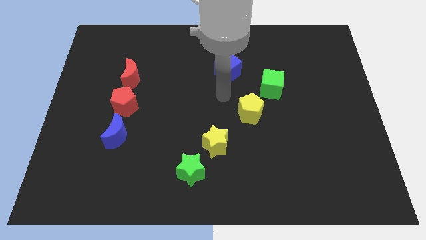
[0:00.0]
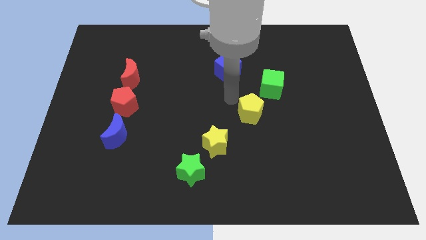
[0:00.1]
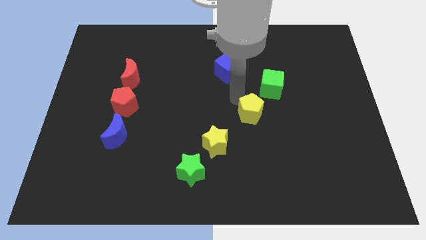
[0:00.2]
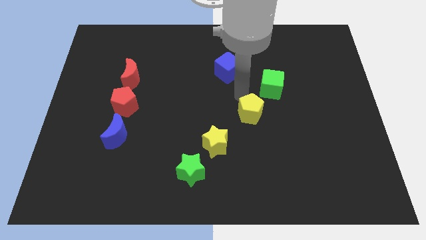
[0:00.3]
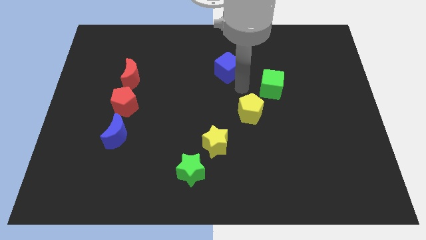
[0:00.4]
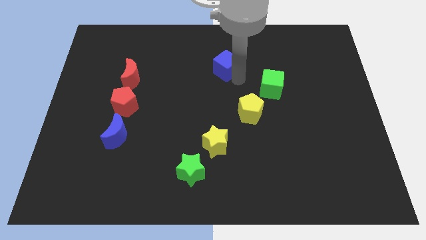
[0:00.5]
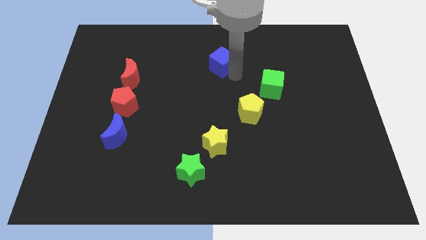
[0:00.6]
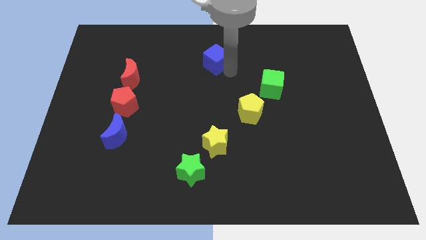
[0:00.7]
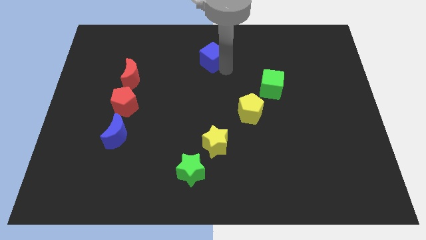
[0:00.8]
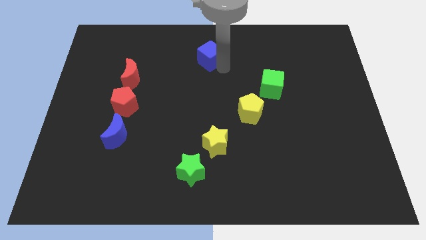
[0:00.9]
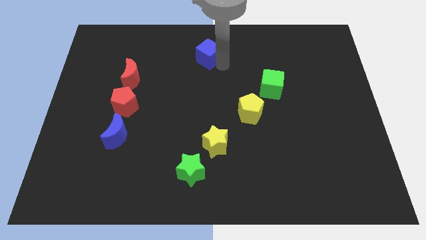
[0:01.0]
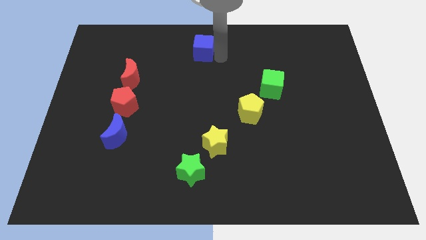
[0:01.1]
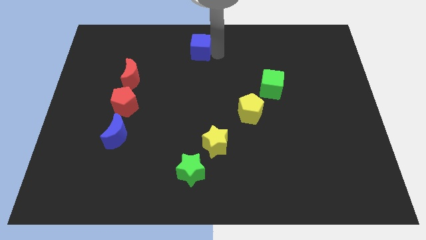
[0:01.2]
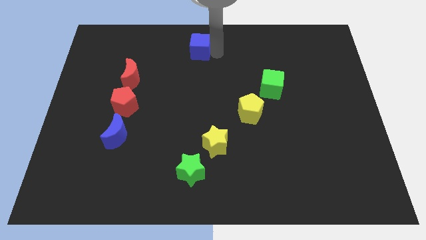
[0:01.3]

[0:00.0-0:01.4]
move blue cube to the top of the board

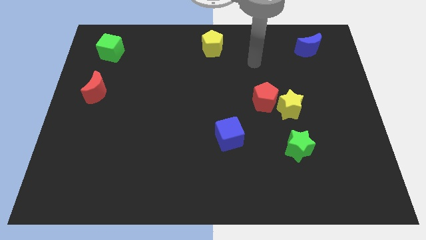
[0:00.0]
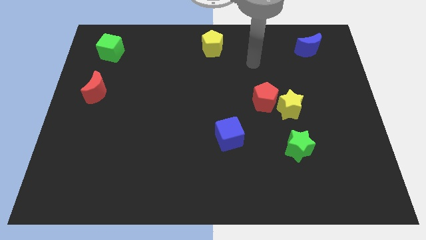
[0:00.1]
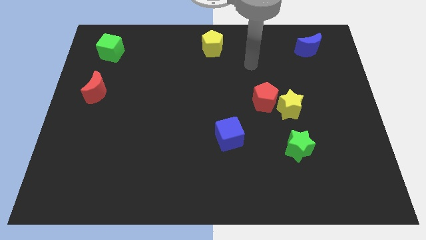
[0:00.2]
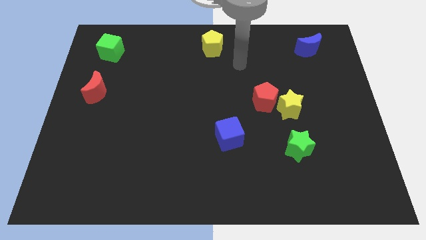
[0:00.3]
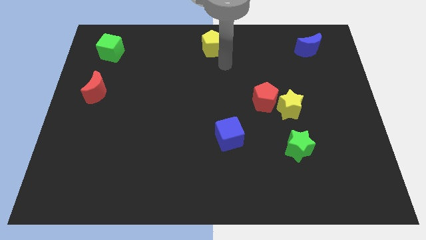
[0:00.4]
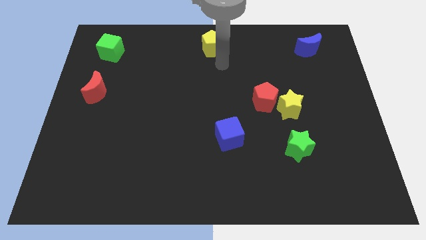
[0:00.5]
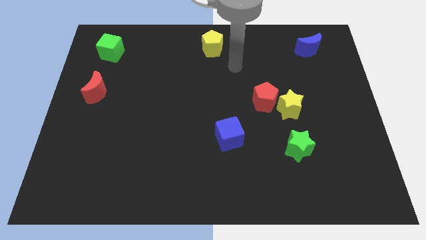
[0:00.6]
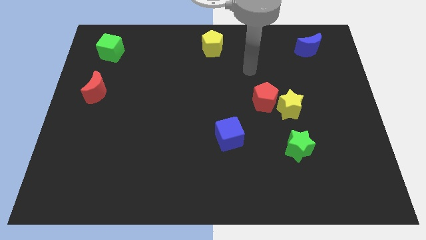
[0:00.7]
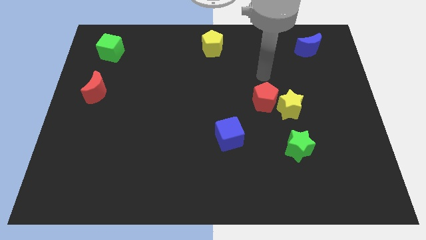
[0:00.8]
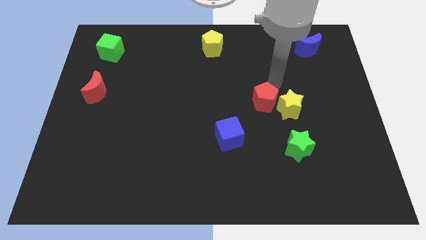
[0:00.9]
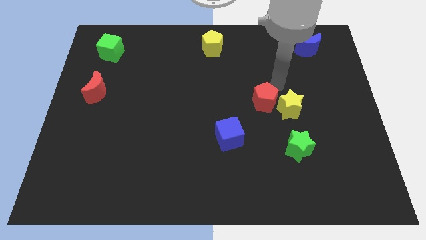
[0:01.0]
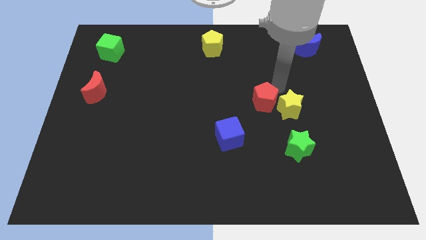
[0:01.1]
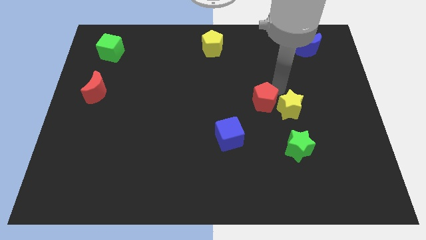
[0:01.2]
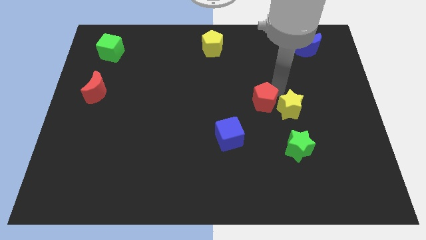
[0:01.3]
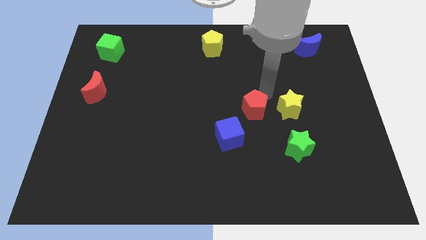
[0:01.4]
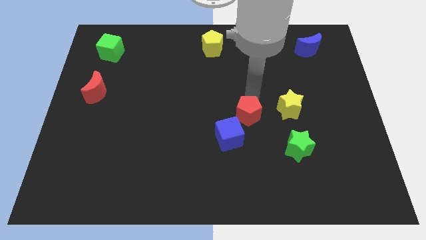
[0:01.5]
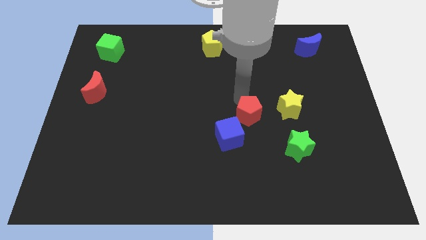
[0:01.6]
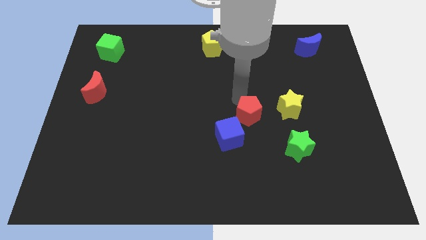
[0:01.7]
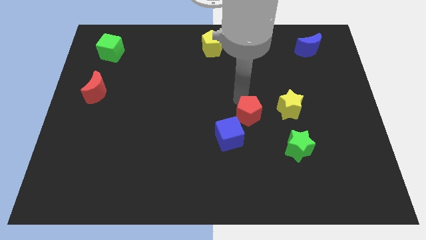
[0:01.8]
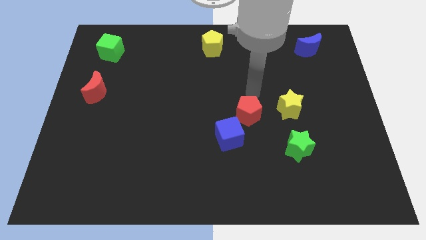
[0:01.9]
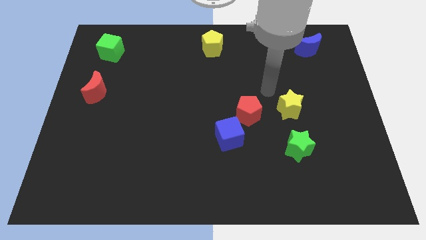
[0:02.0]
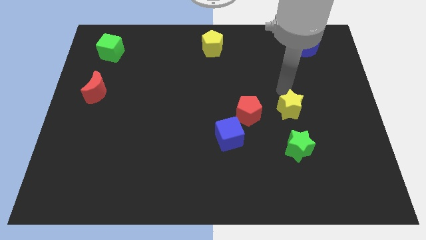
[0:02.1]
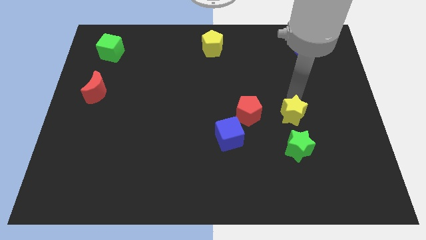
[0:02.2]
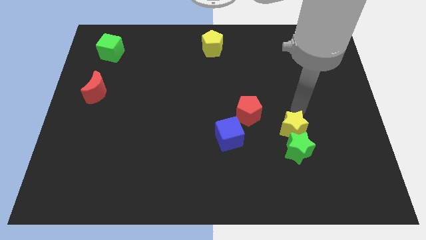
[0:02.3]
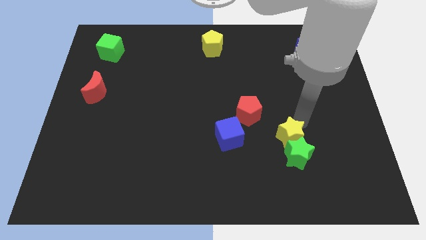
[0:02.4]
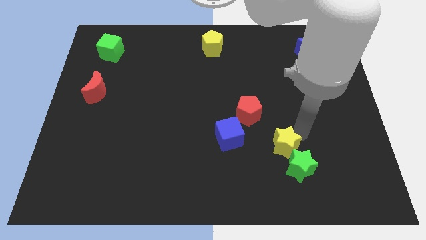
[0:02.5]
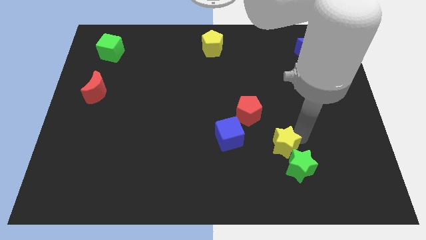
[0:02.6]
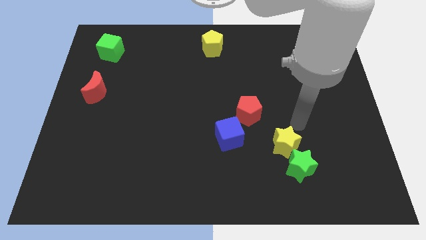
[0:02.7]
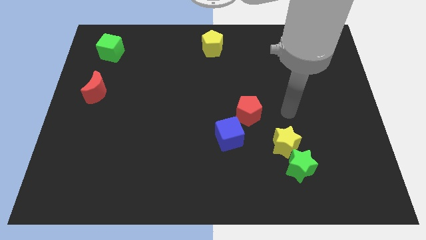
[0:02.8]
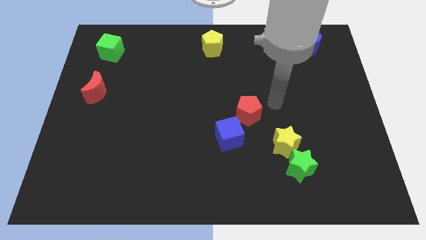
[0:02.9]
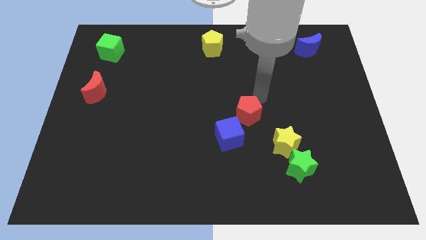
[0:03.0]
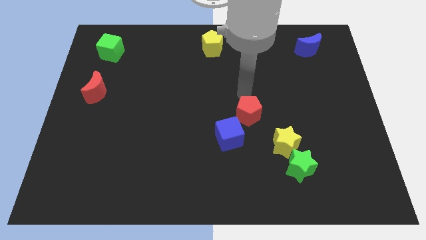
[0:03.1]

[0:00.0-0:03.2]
move red pentagon towards blue cube

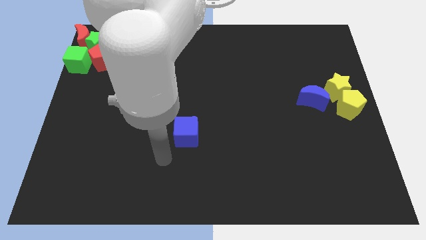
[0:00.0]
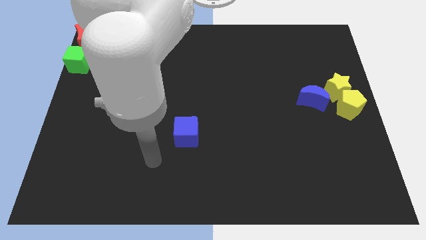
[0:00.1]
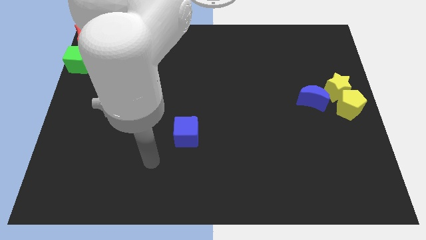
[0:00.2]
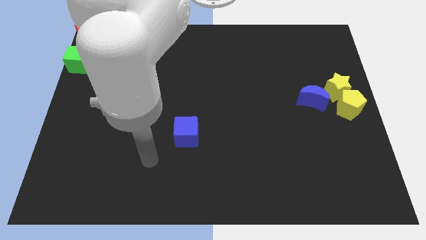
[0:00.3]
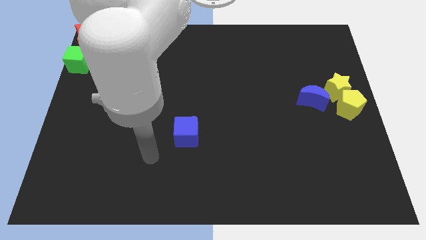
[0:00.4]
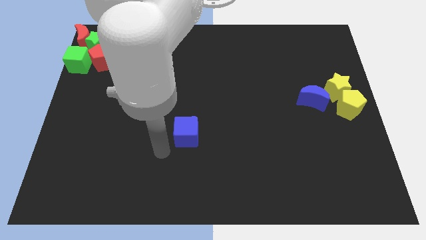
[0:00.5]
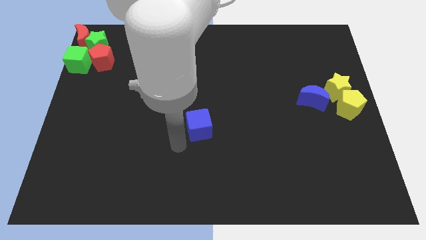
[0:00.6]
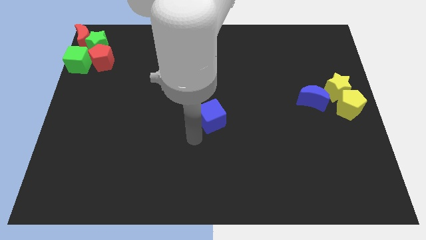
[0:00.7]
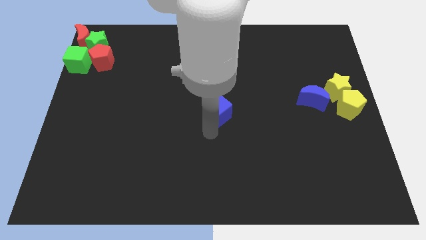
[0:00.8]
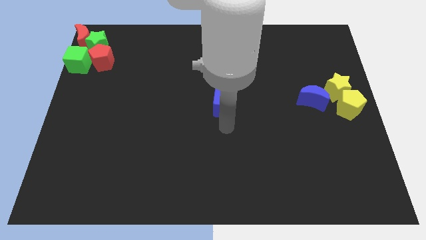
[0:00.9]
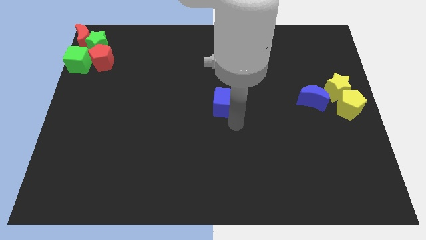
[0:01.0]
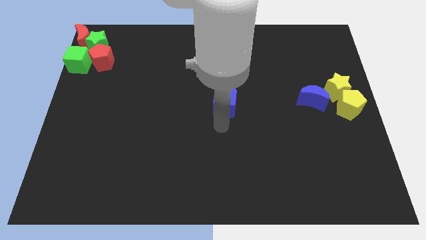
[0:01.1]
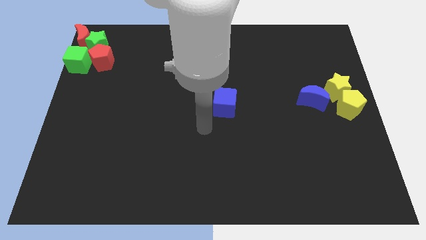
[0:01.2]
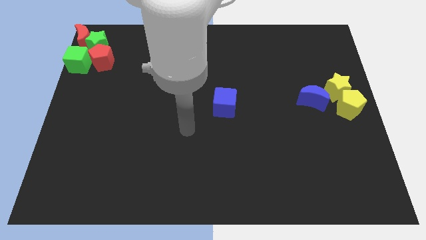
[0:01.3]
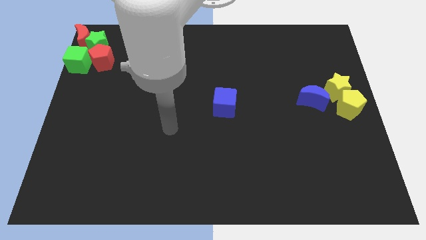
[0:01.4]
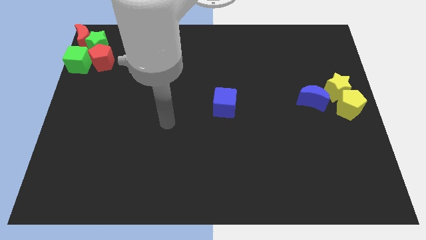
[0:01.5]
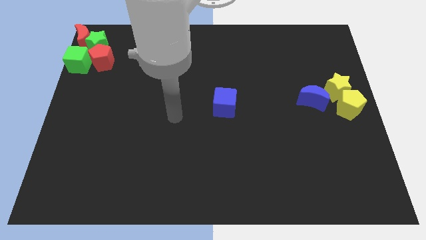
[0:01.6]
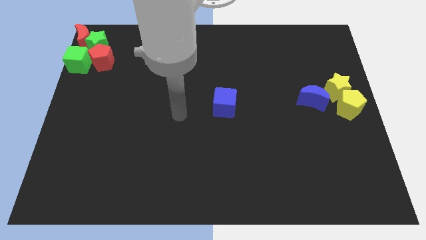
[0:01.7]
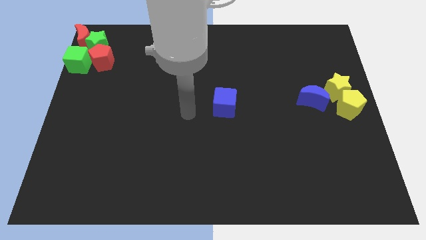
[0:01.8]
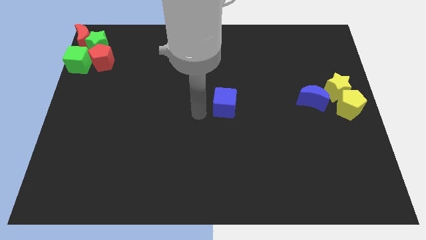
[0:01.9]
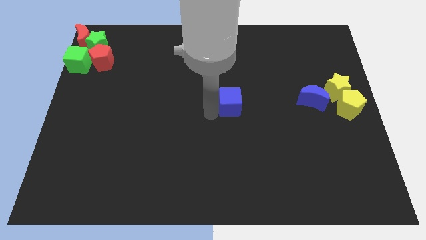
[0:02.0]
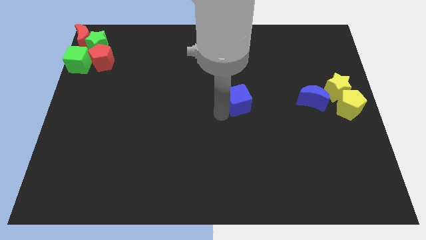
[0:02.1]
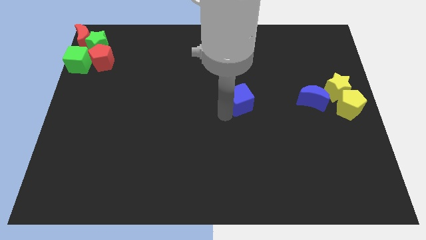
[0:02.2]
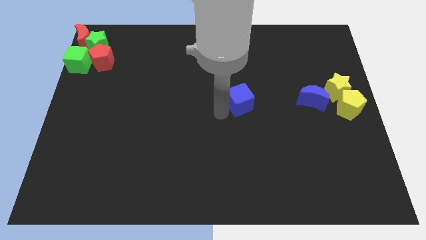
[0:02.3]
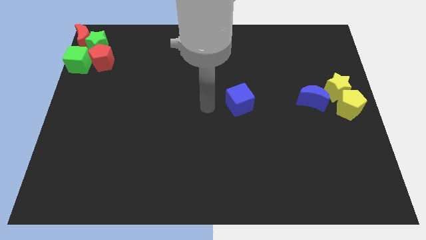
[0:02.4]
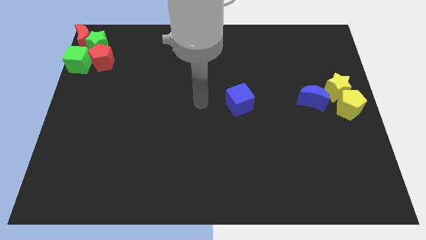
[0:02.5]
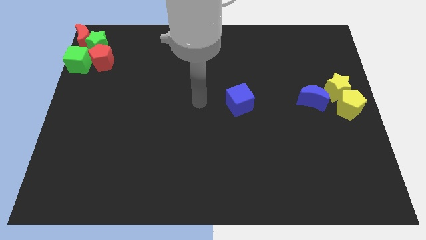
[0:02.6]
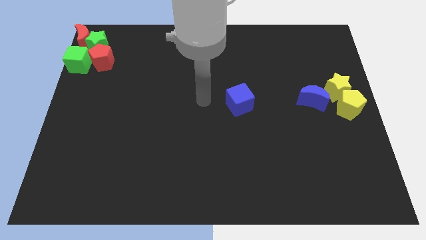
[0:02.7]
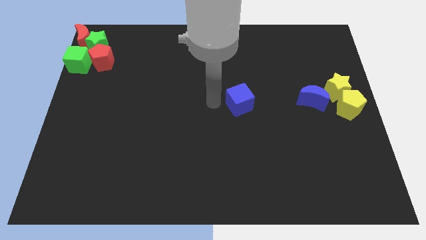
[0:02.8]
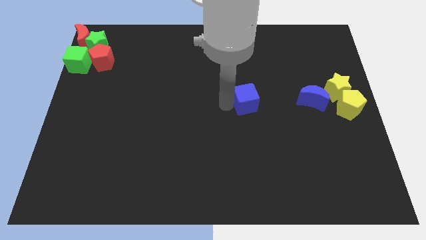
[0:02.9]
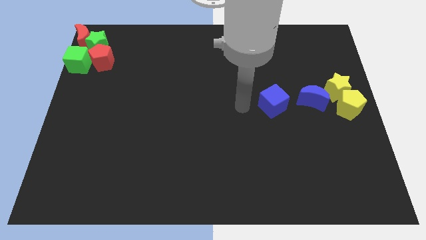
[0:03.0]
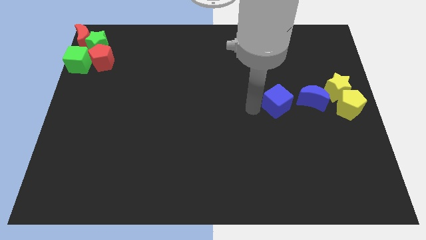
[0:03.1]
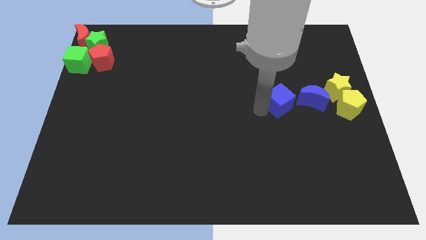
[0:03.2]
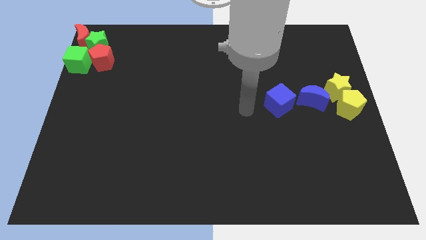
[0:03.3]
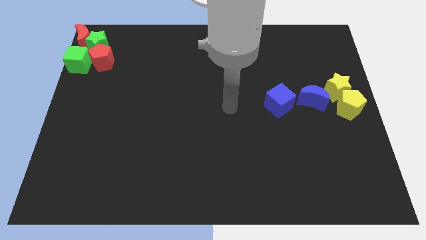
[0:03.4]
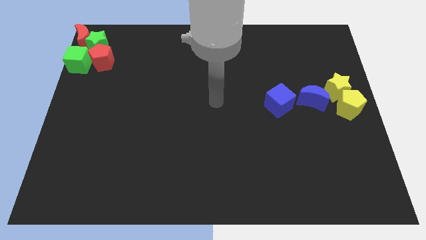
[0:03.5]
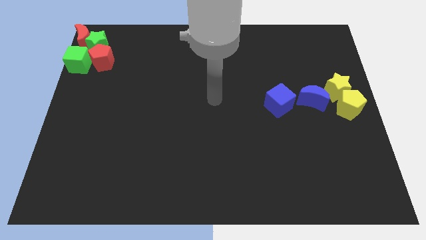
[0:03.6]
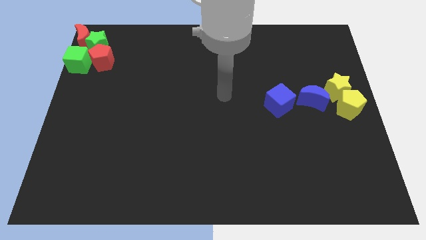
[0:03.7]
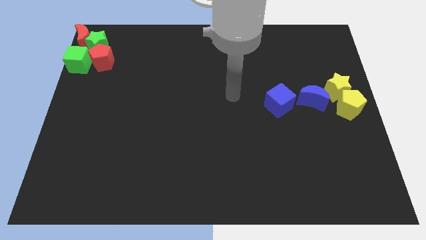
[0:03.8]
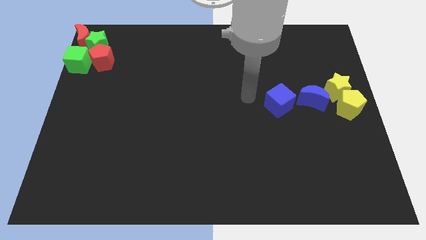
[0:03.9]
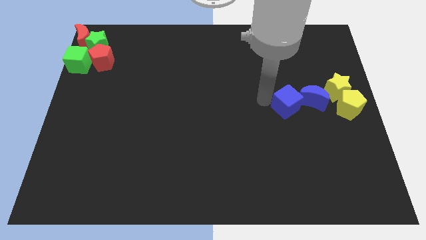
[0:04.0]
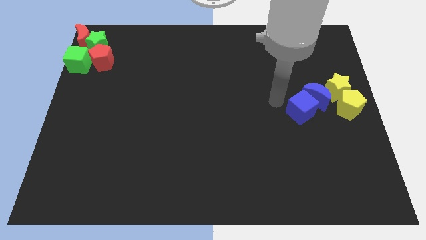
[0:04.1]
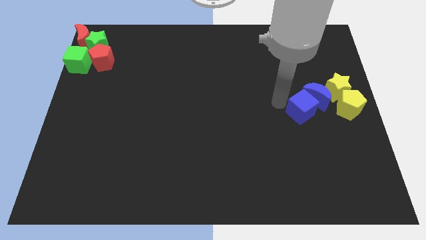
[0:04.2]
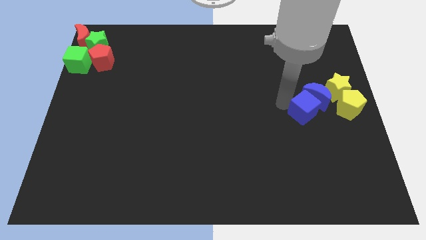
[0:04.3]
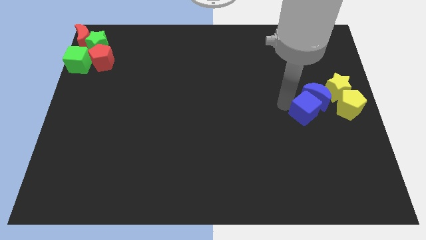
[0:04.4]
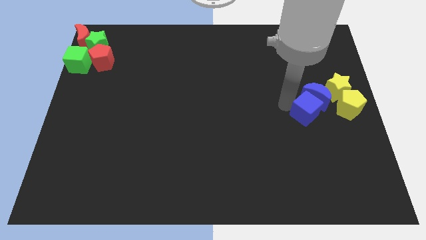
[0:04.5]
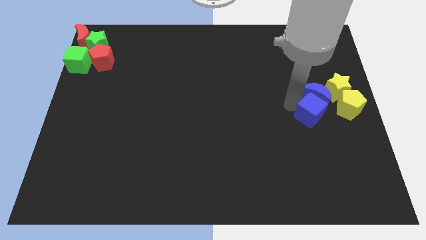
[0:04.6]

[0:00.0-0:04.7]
move the blue cube into the blue crescent
